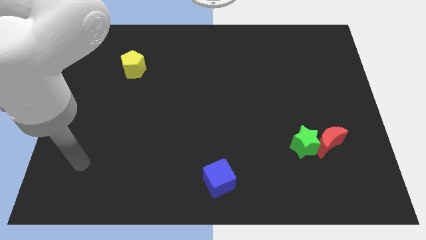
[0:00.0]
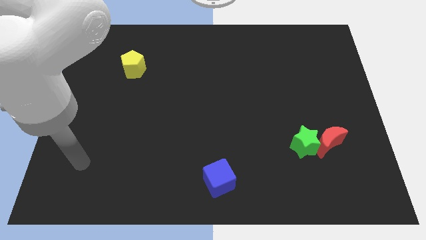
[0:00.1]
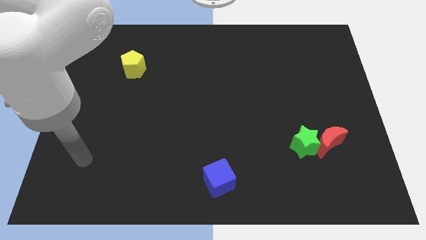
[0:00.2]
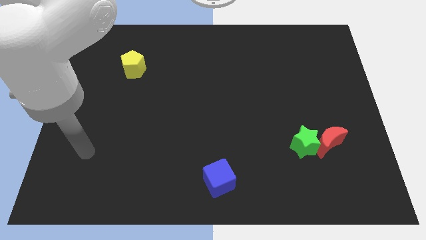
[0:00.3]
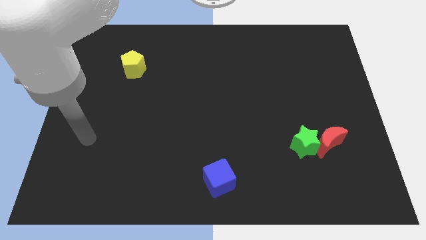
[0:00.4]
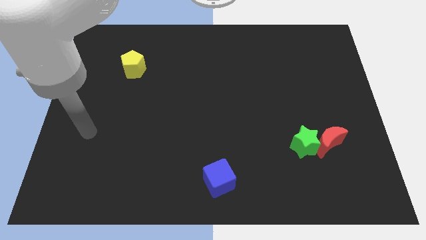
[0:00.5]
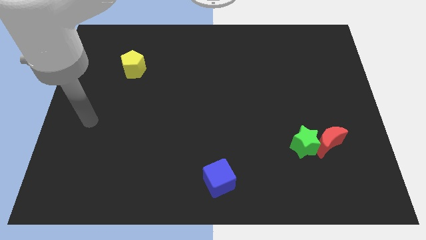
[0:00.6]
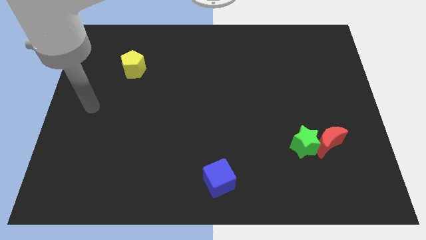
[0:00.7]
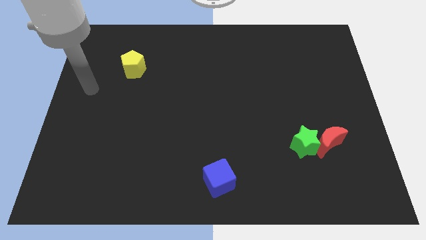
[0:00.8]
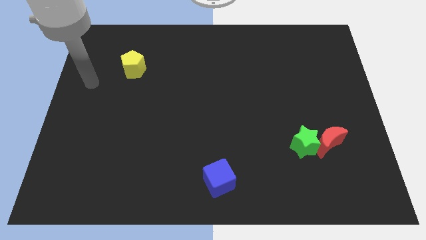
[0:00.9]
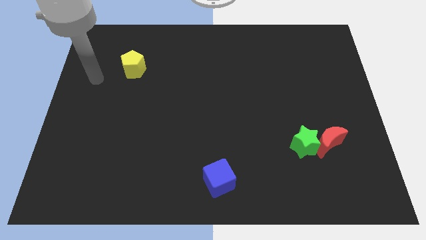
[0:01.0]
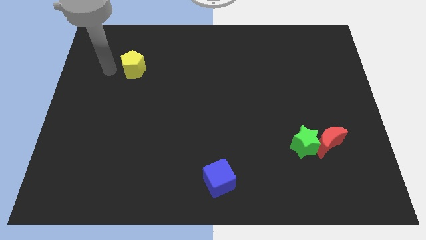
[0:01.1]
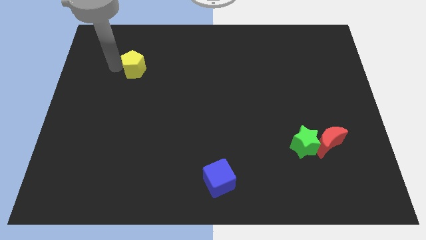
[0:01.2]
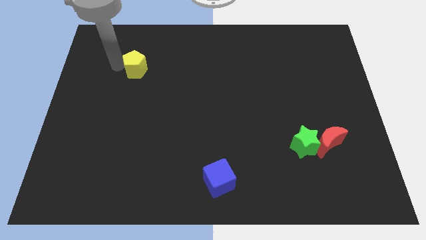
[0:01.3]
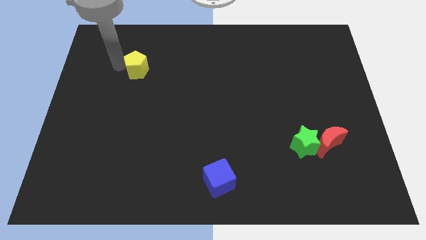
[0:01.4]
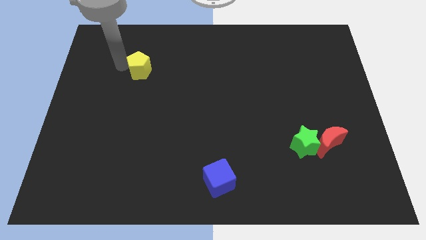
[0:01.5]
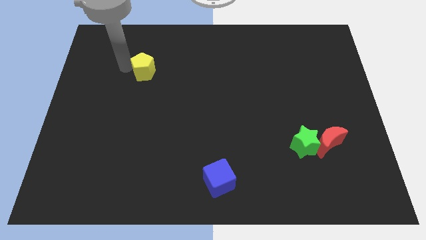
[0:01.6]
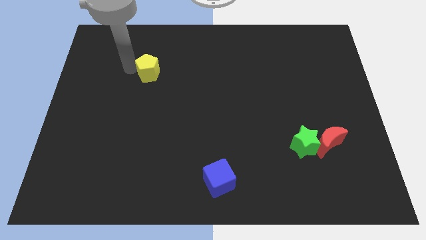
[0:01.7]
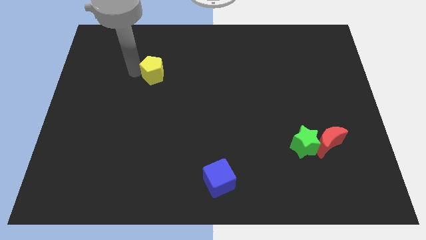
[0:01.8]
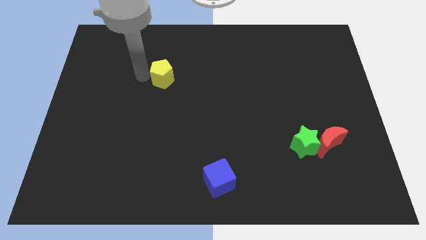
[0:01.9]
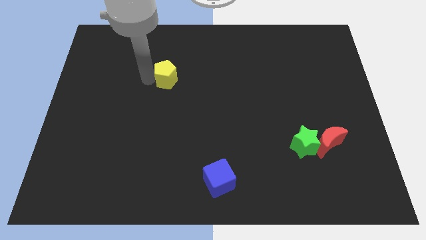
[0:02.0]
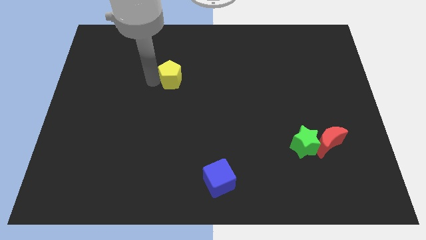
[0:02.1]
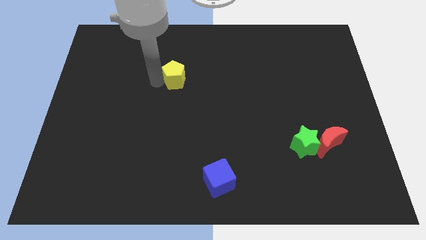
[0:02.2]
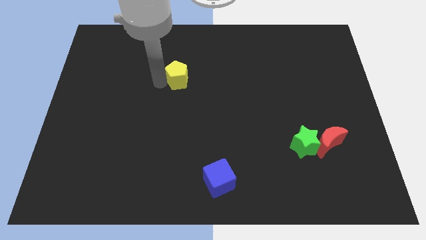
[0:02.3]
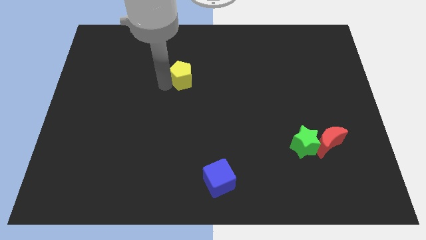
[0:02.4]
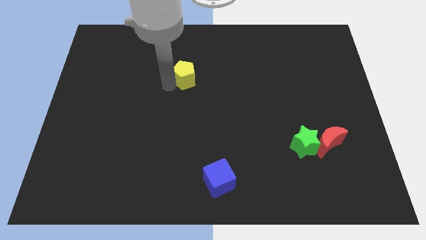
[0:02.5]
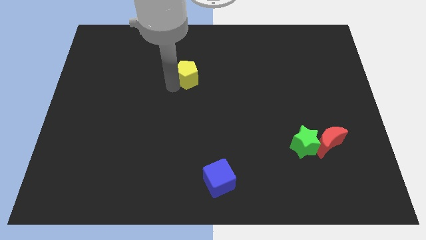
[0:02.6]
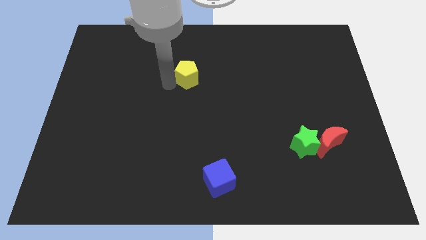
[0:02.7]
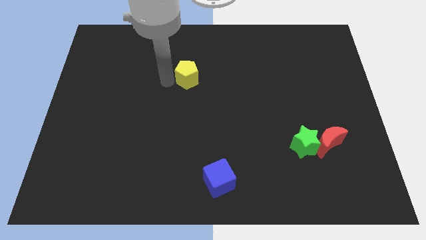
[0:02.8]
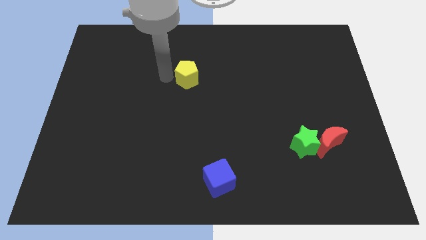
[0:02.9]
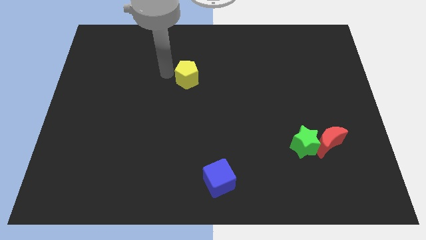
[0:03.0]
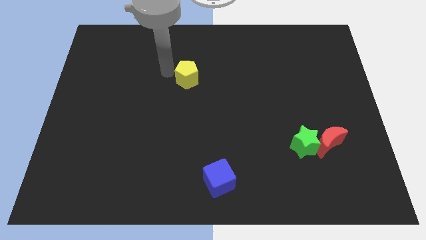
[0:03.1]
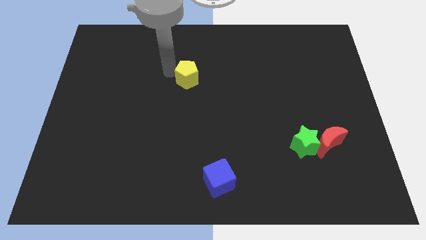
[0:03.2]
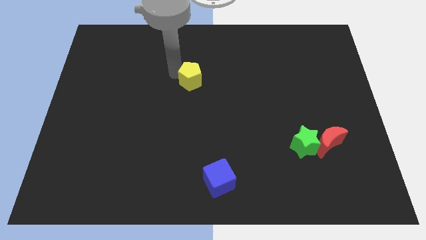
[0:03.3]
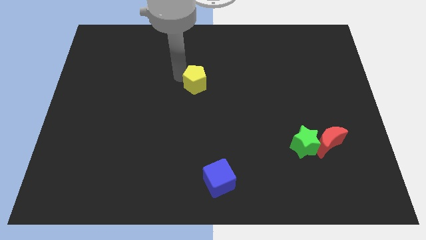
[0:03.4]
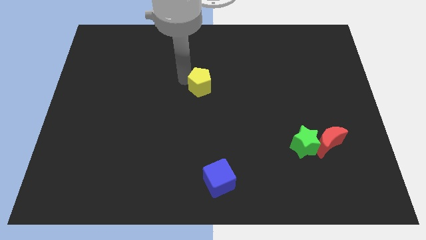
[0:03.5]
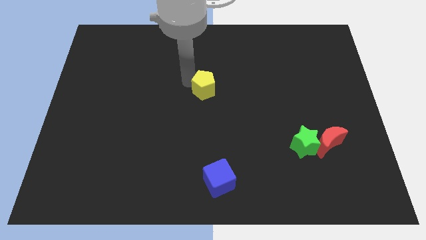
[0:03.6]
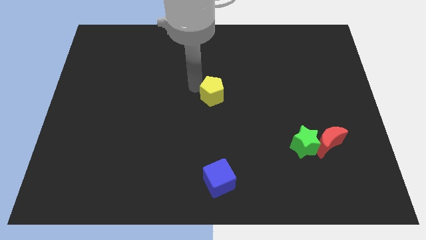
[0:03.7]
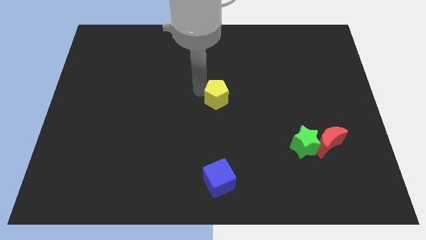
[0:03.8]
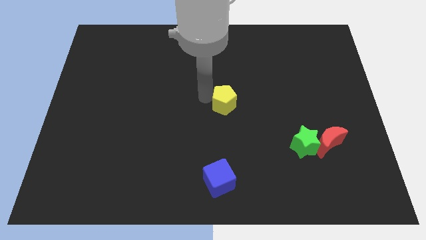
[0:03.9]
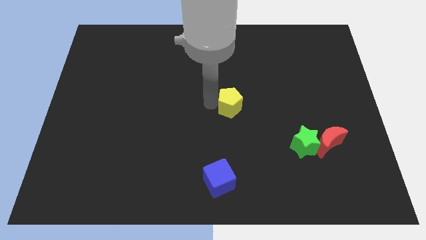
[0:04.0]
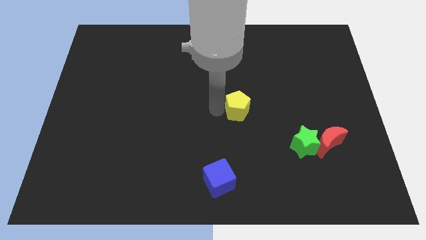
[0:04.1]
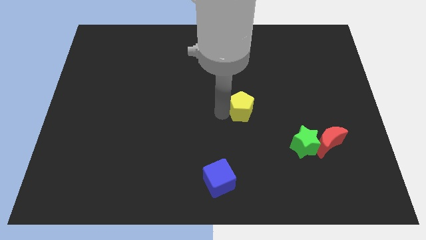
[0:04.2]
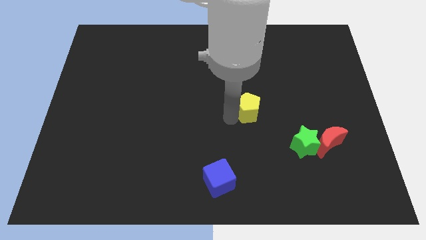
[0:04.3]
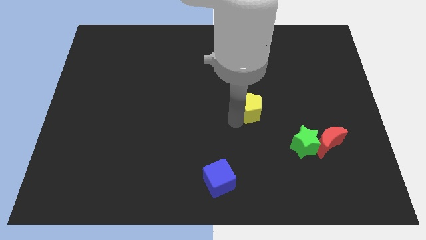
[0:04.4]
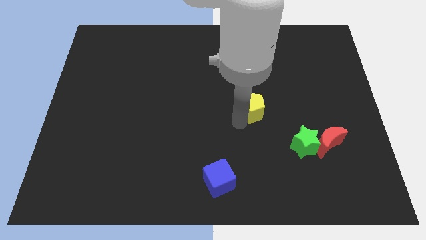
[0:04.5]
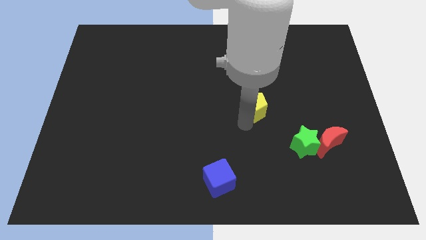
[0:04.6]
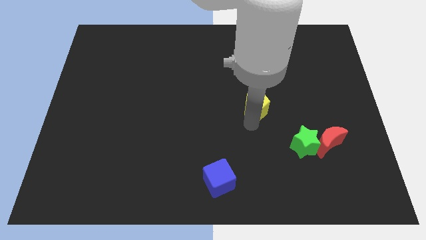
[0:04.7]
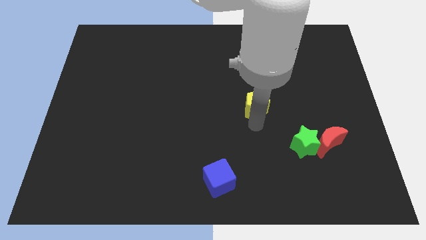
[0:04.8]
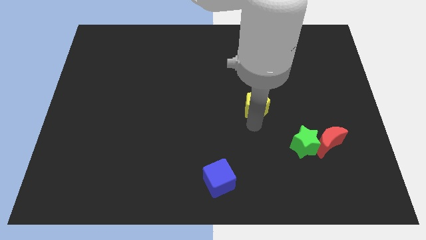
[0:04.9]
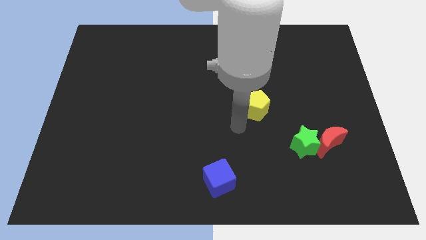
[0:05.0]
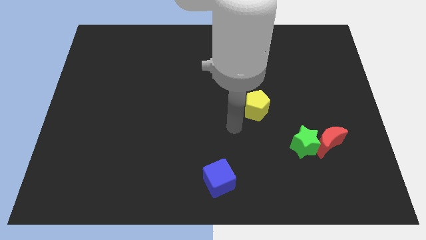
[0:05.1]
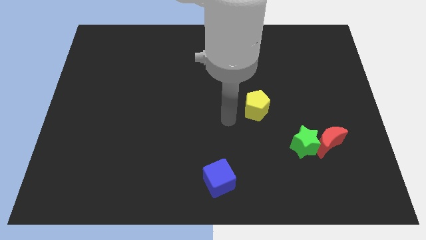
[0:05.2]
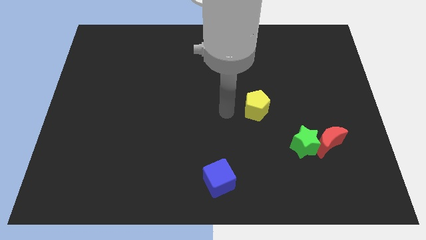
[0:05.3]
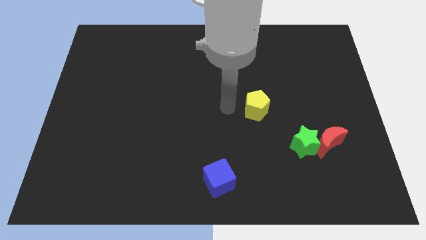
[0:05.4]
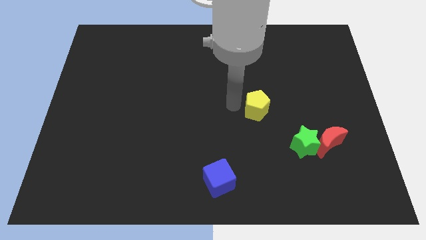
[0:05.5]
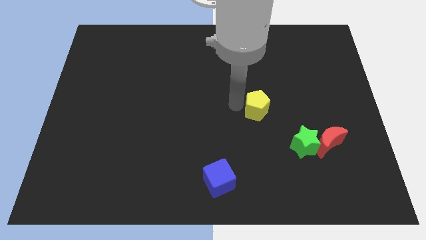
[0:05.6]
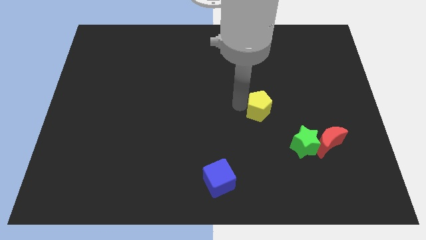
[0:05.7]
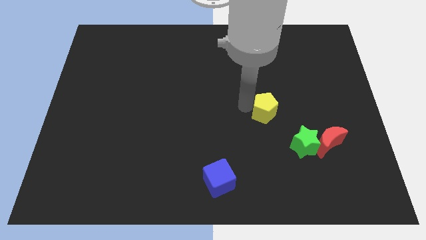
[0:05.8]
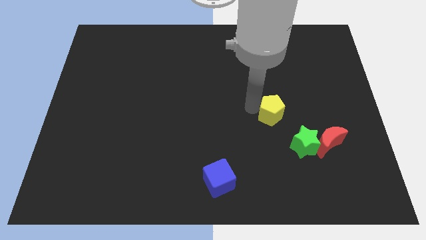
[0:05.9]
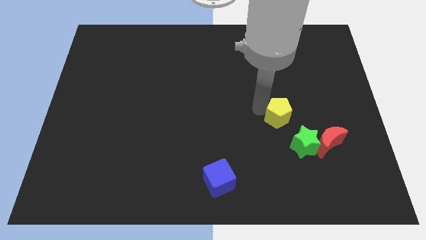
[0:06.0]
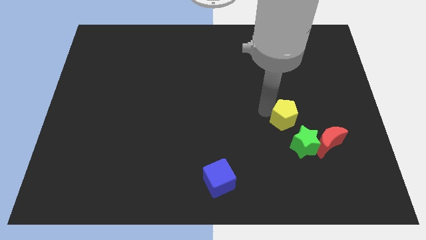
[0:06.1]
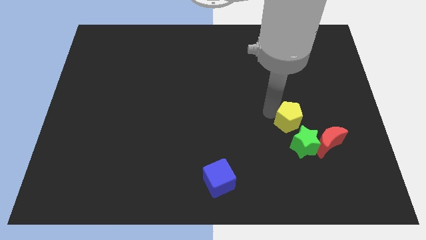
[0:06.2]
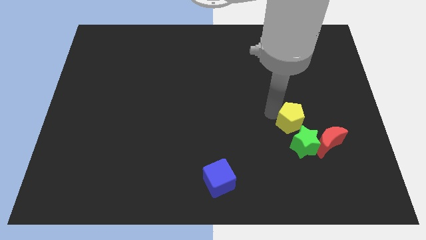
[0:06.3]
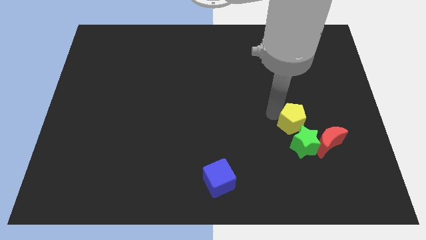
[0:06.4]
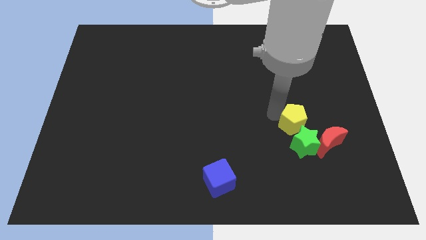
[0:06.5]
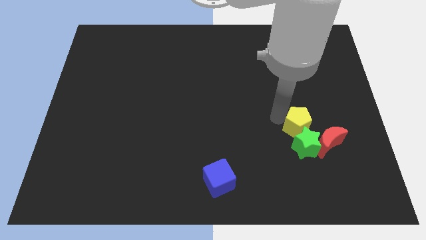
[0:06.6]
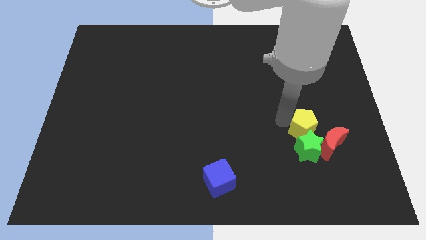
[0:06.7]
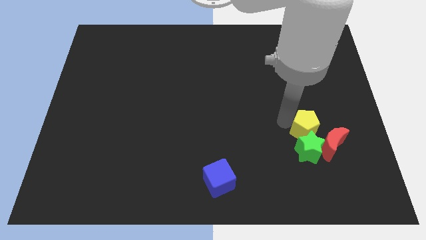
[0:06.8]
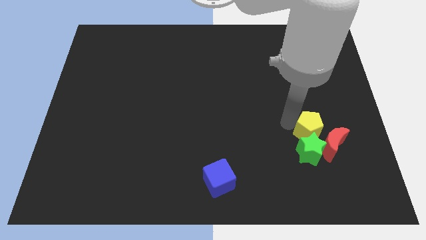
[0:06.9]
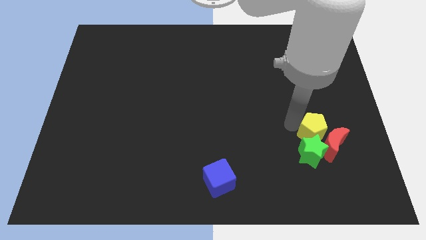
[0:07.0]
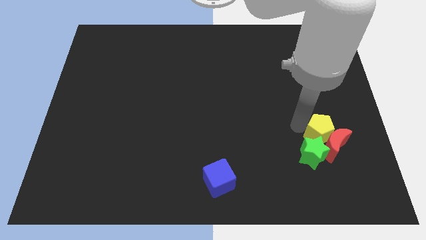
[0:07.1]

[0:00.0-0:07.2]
push the pentagon next to the red block

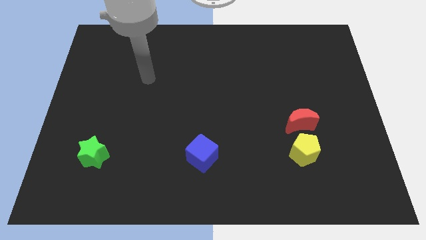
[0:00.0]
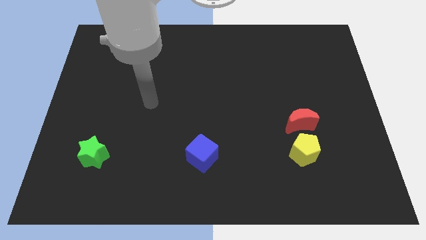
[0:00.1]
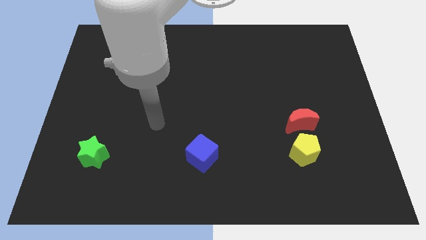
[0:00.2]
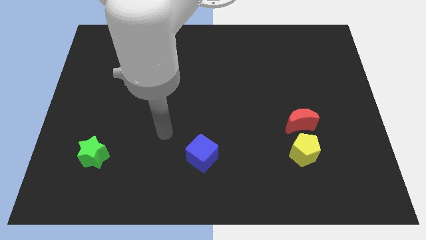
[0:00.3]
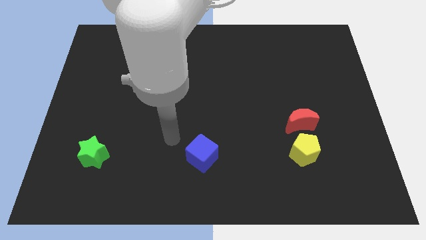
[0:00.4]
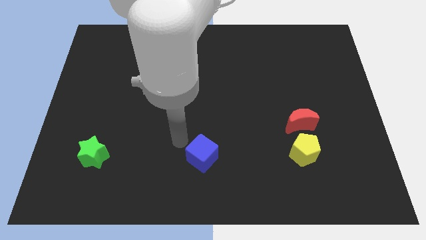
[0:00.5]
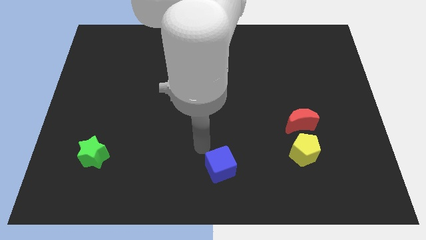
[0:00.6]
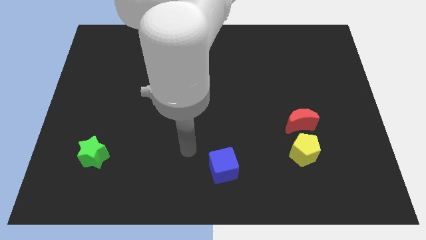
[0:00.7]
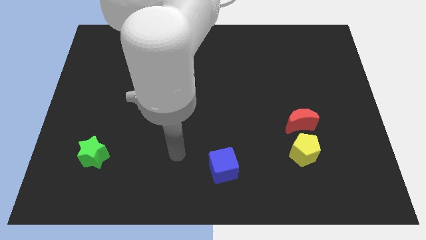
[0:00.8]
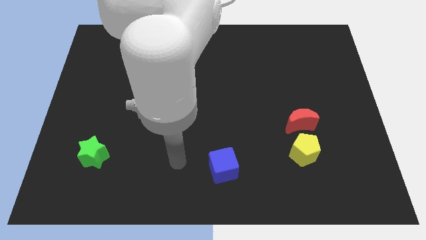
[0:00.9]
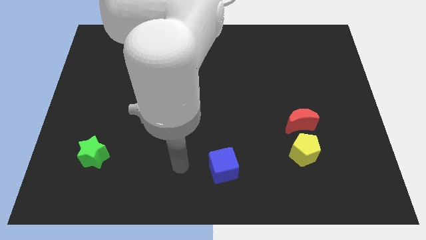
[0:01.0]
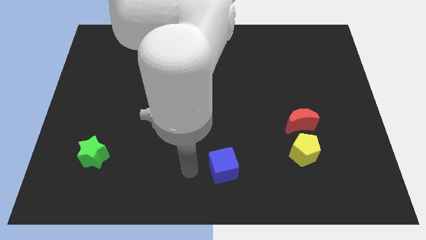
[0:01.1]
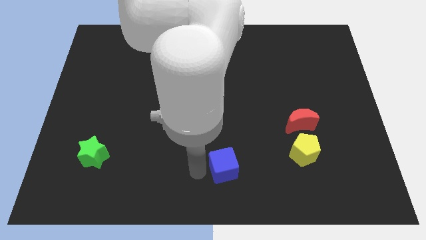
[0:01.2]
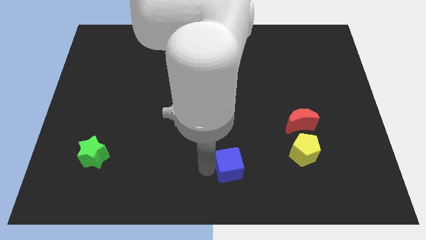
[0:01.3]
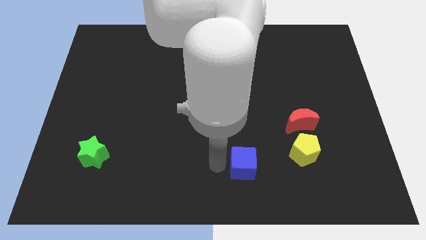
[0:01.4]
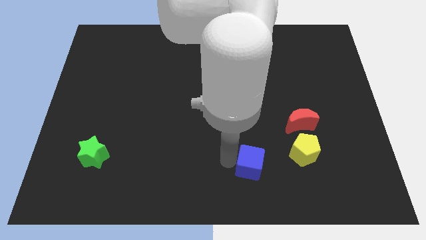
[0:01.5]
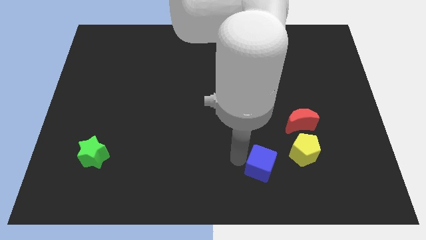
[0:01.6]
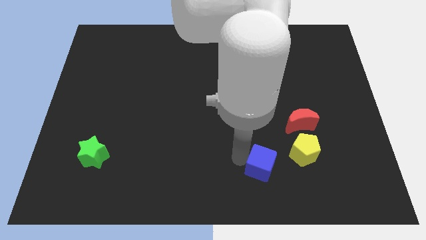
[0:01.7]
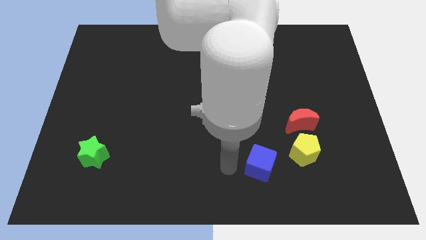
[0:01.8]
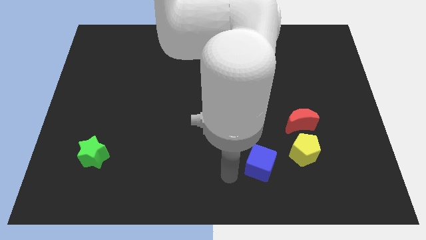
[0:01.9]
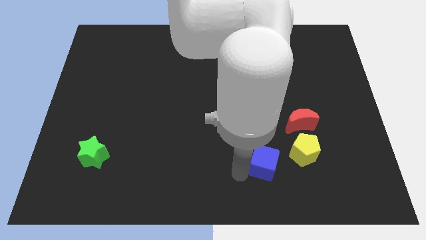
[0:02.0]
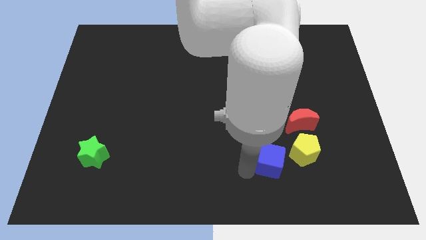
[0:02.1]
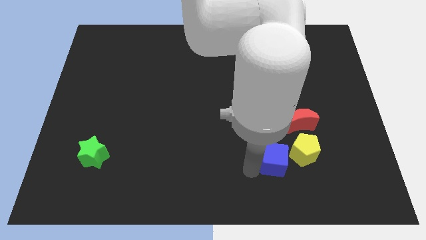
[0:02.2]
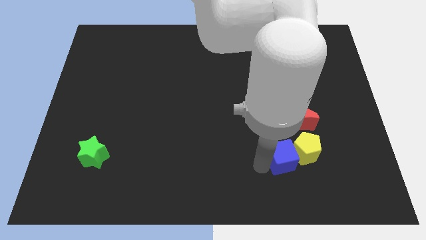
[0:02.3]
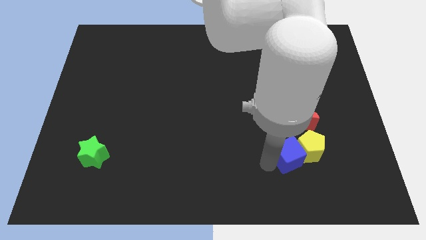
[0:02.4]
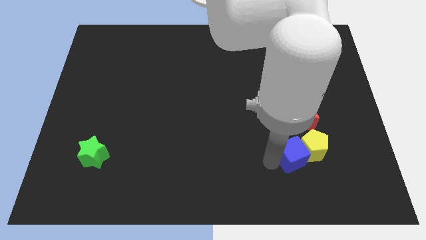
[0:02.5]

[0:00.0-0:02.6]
put the cube next to the yellow block
